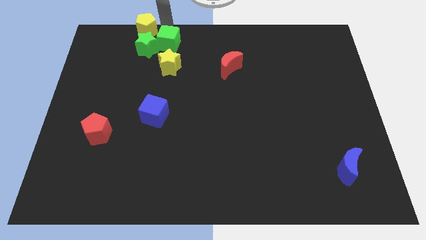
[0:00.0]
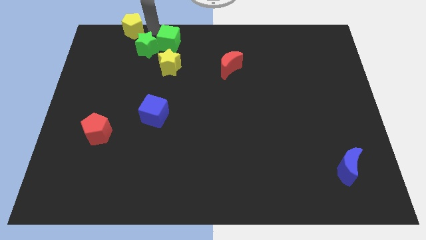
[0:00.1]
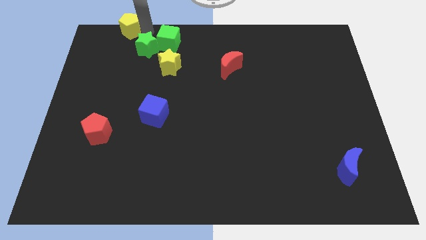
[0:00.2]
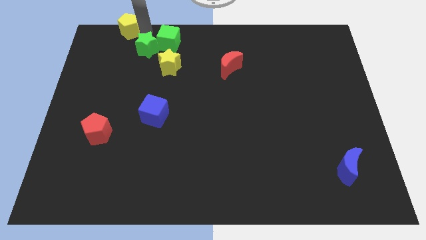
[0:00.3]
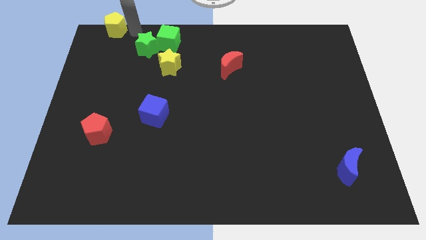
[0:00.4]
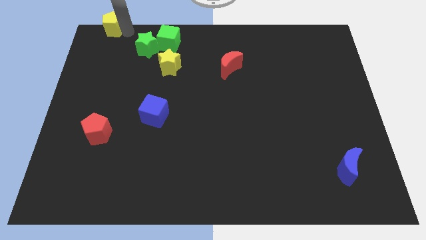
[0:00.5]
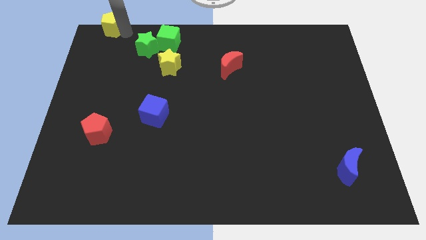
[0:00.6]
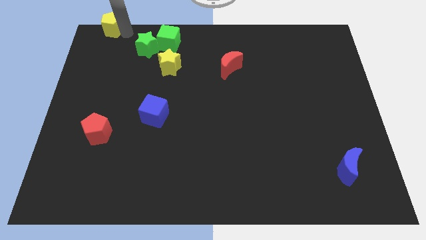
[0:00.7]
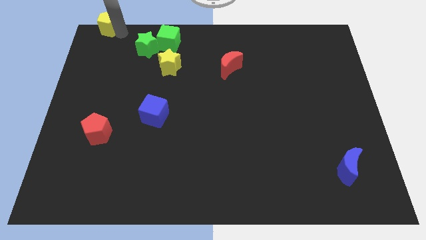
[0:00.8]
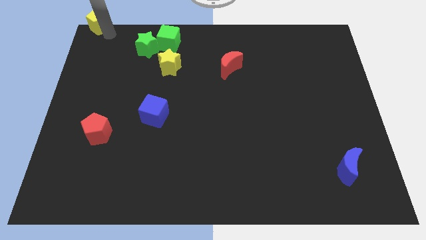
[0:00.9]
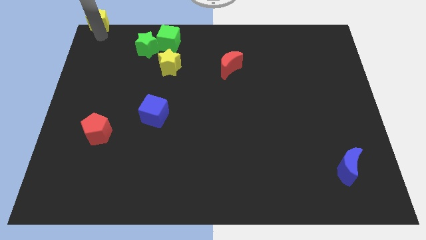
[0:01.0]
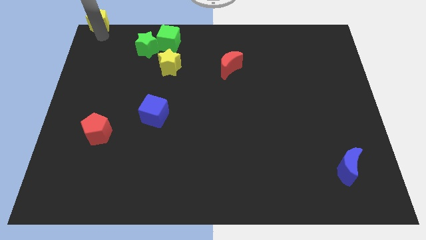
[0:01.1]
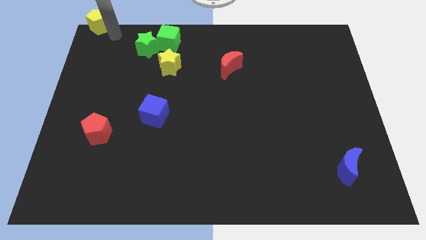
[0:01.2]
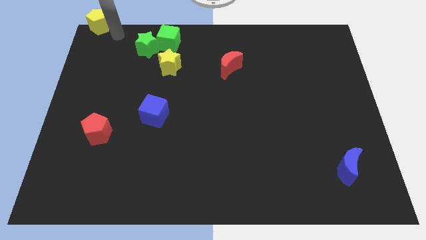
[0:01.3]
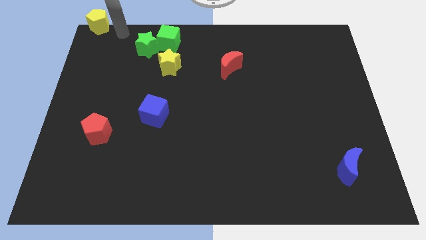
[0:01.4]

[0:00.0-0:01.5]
separate the yellow pentagon from green cube

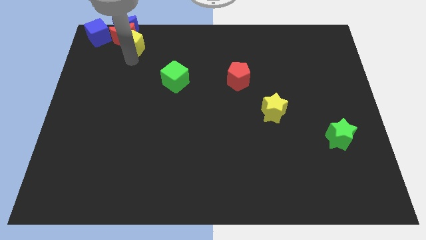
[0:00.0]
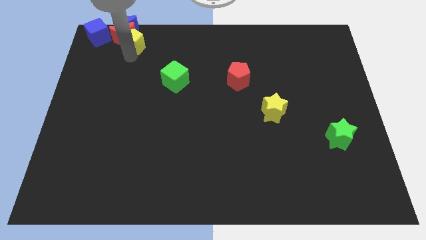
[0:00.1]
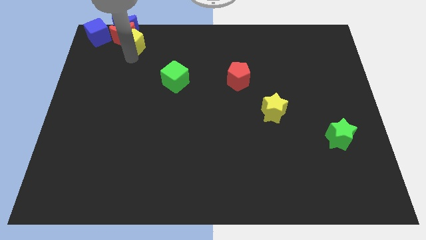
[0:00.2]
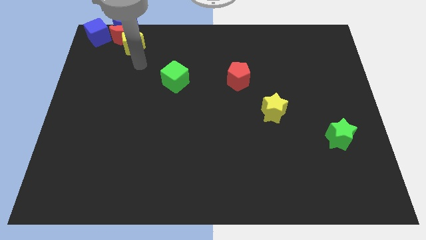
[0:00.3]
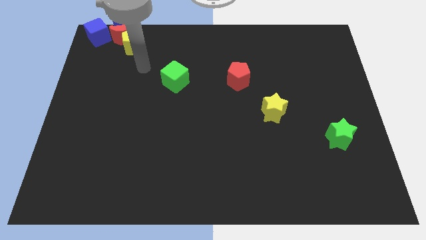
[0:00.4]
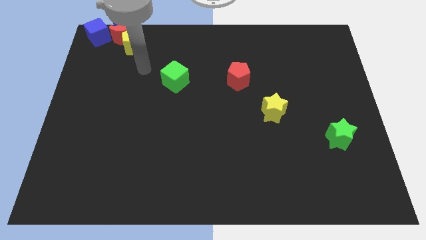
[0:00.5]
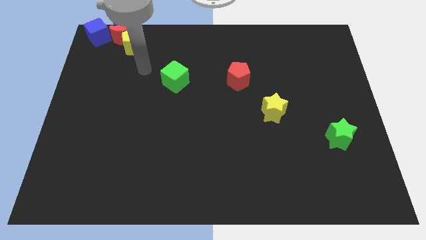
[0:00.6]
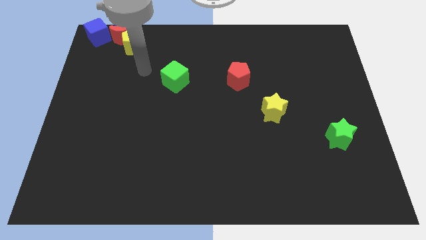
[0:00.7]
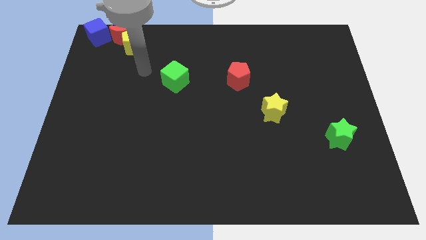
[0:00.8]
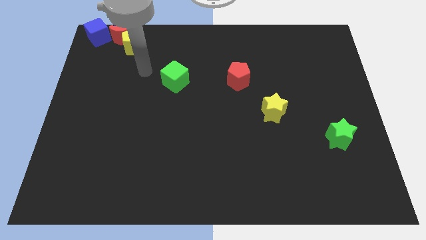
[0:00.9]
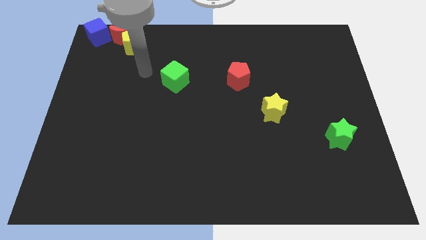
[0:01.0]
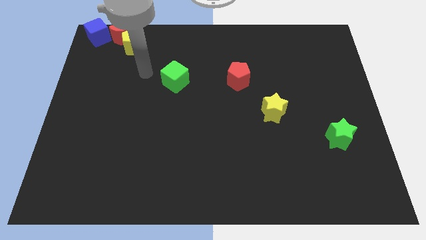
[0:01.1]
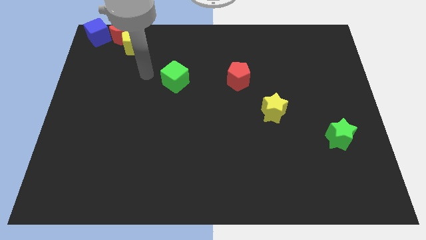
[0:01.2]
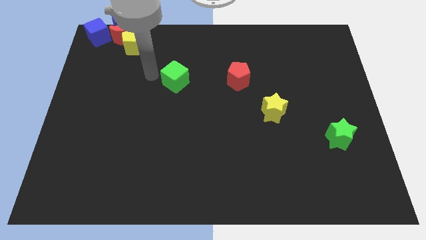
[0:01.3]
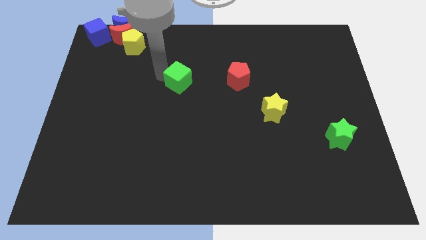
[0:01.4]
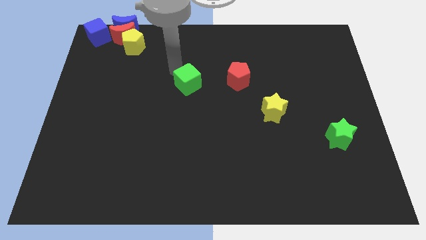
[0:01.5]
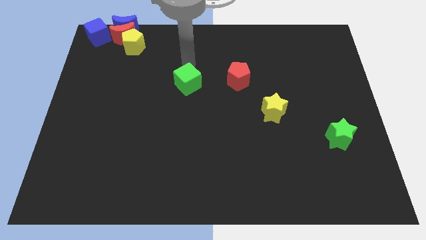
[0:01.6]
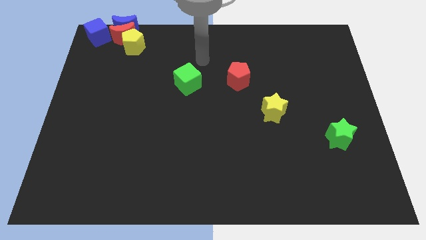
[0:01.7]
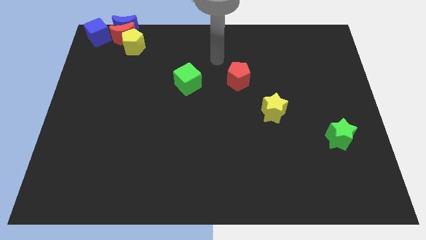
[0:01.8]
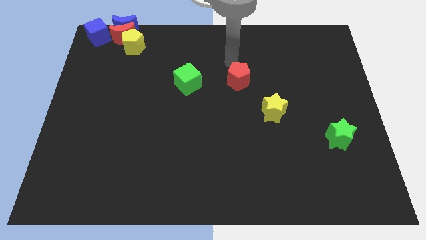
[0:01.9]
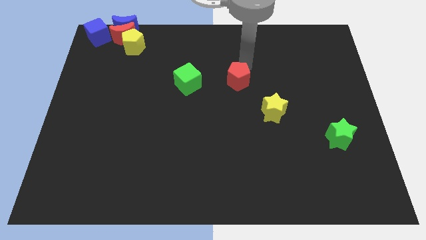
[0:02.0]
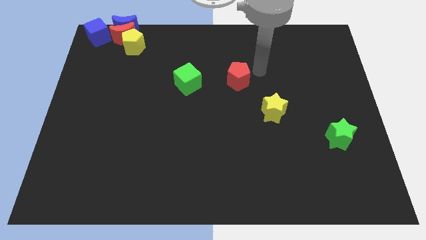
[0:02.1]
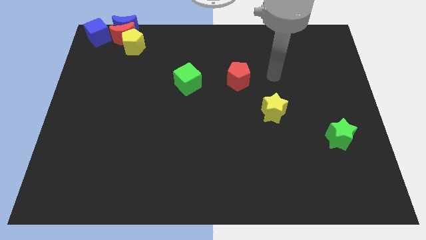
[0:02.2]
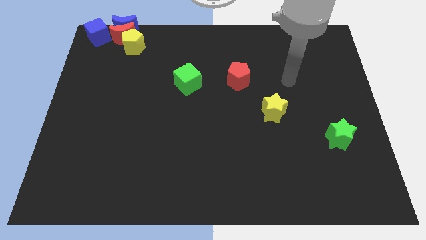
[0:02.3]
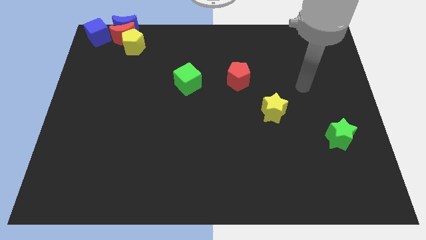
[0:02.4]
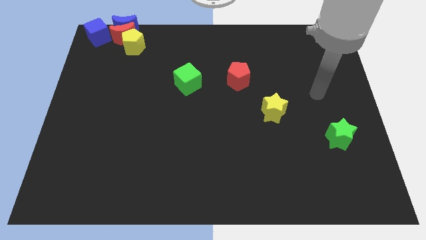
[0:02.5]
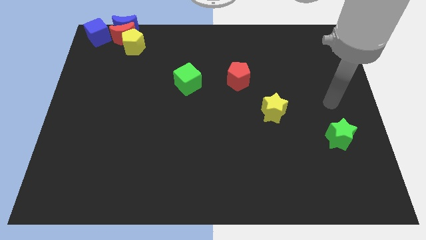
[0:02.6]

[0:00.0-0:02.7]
move the green cube vertically to red pentagon

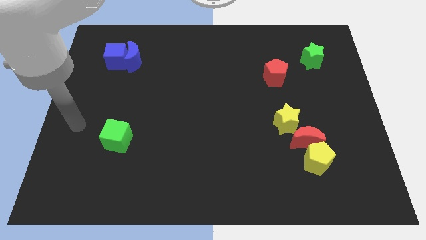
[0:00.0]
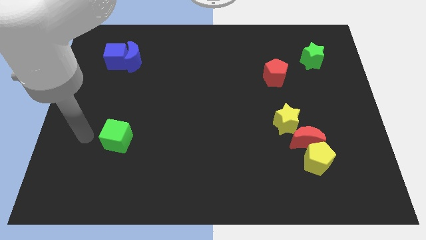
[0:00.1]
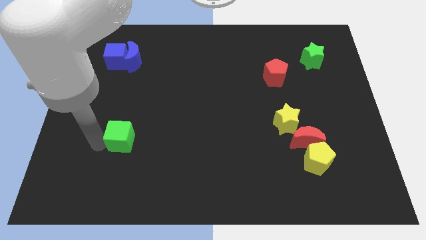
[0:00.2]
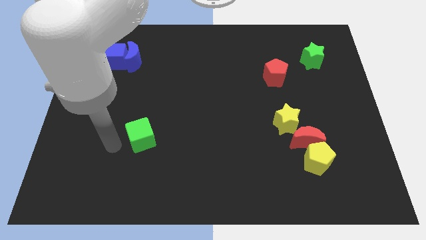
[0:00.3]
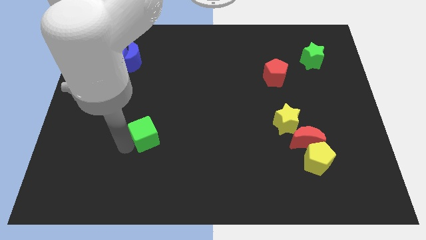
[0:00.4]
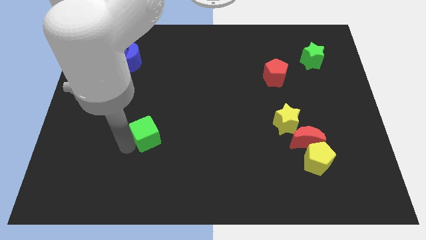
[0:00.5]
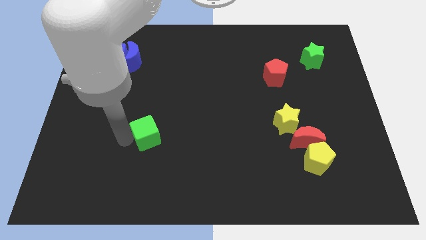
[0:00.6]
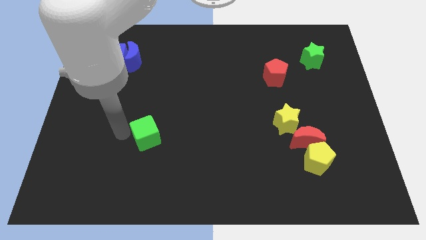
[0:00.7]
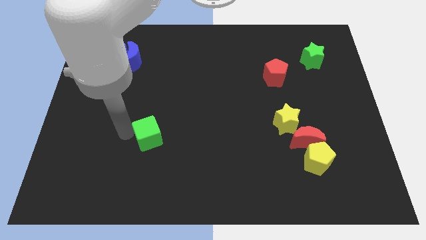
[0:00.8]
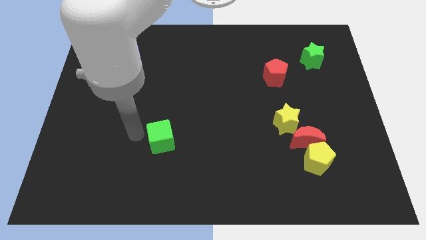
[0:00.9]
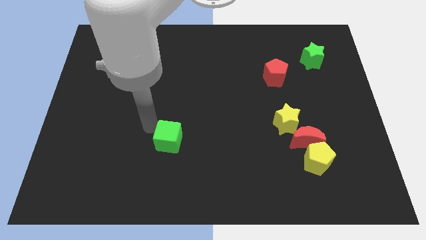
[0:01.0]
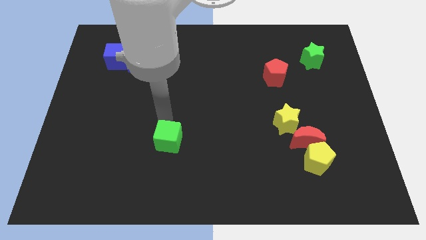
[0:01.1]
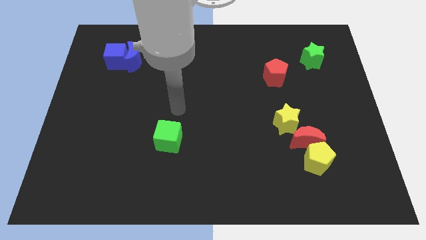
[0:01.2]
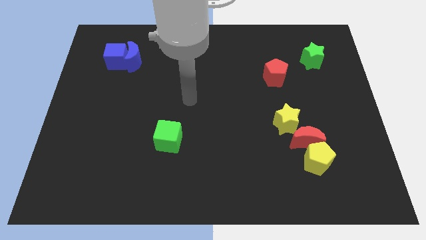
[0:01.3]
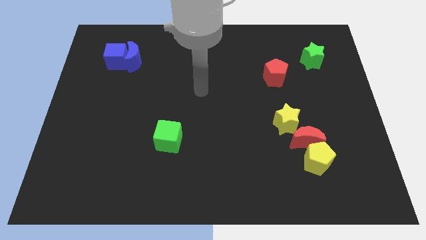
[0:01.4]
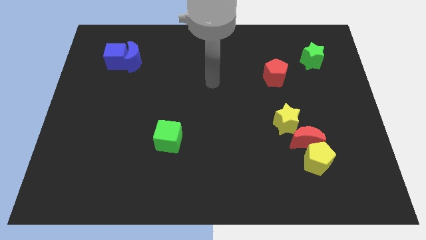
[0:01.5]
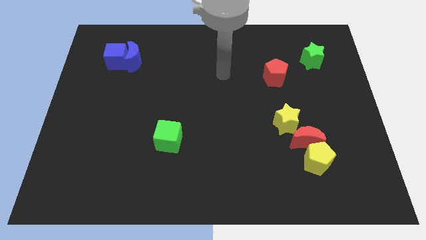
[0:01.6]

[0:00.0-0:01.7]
push green cube towards the right

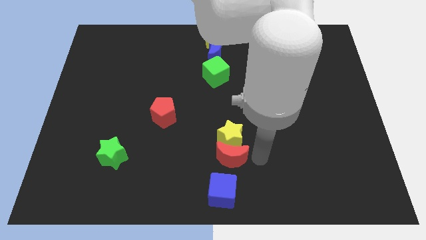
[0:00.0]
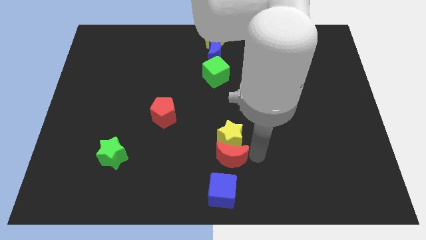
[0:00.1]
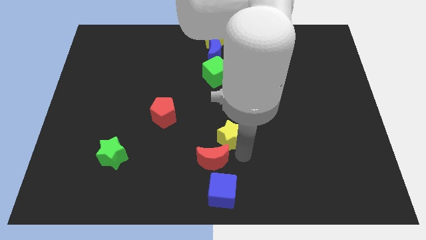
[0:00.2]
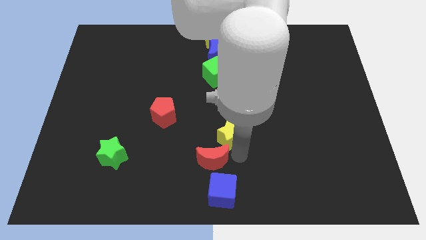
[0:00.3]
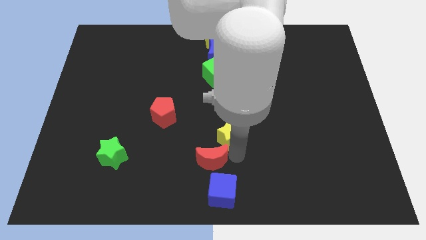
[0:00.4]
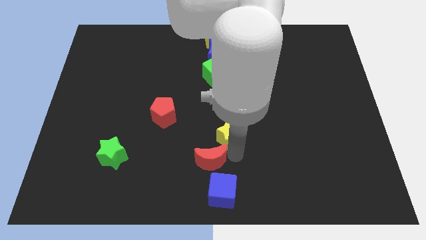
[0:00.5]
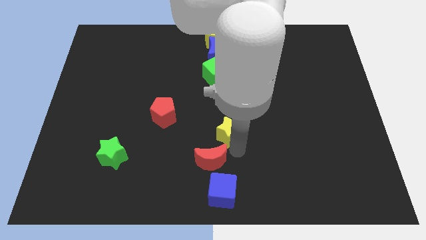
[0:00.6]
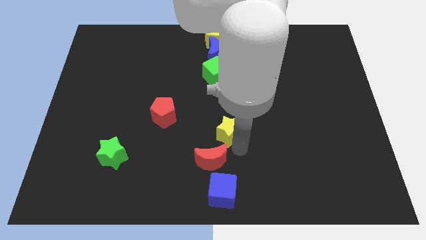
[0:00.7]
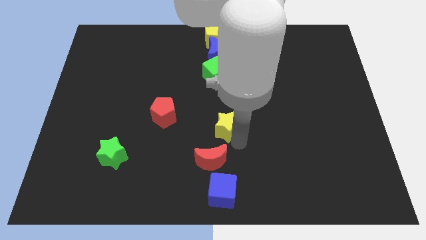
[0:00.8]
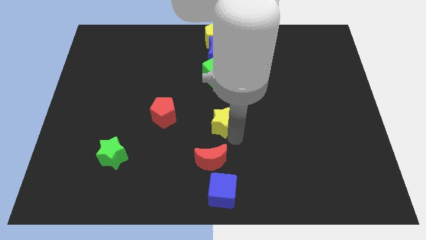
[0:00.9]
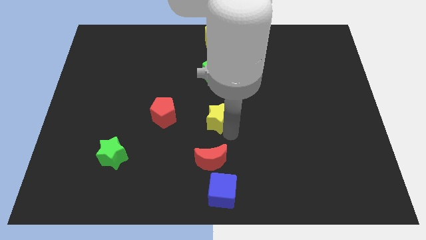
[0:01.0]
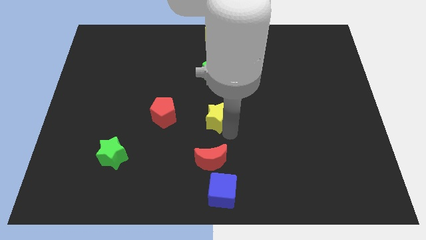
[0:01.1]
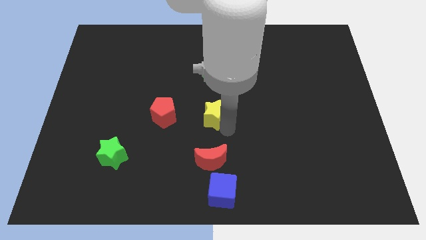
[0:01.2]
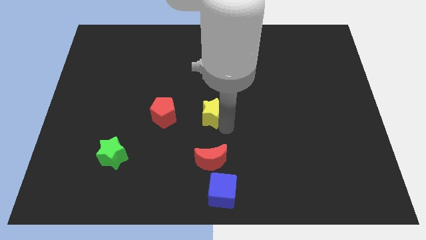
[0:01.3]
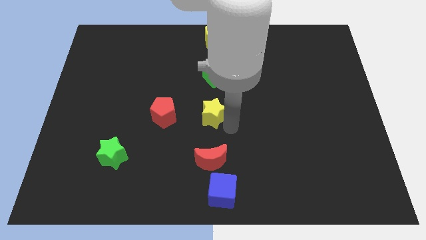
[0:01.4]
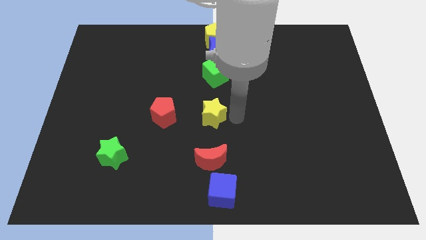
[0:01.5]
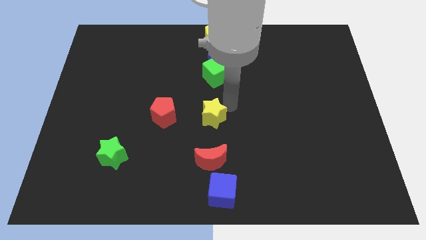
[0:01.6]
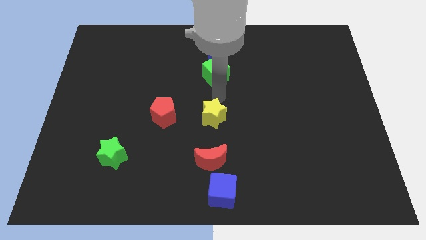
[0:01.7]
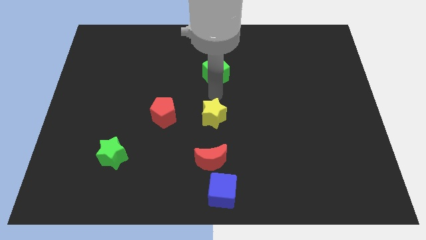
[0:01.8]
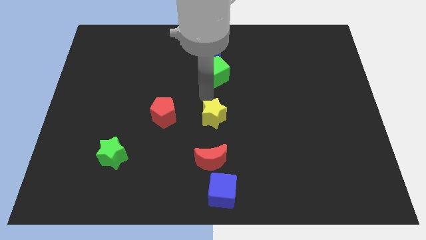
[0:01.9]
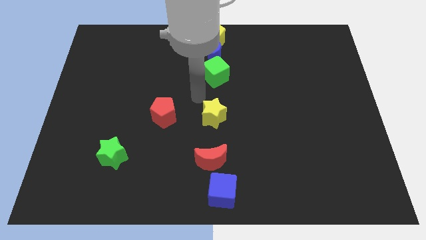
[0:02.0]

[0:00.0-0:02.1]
separate the yellow star from the red moon

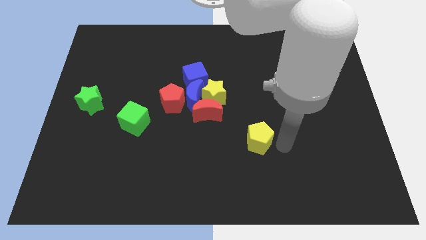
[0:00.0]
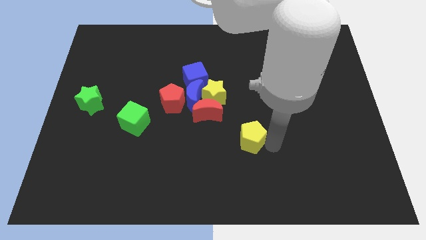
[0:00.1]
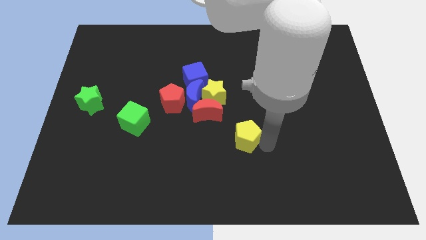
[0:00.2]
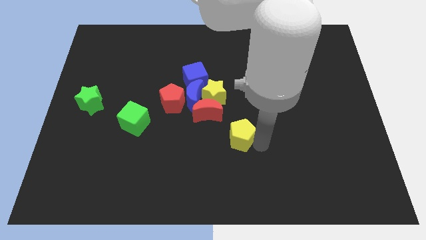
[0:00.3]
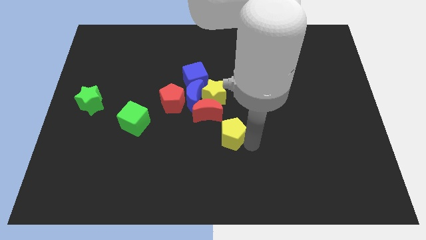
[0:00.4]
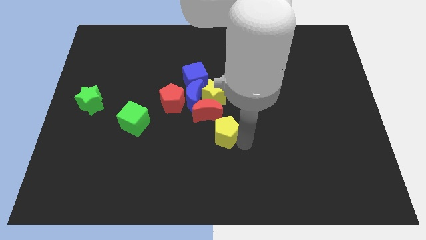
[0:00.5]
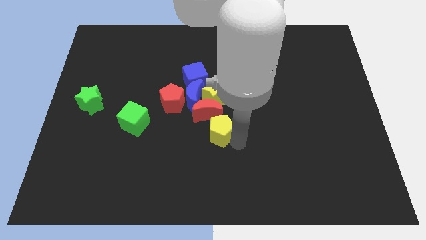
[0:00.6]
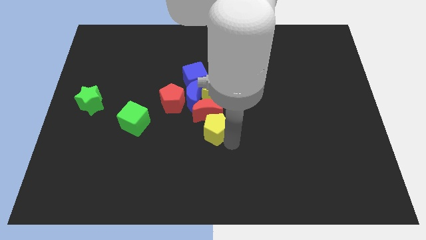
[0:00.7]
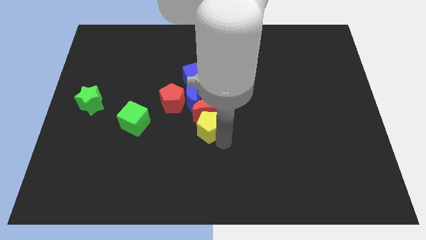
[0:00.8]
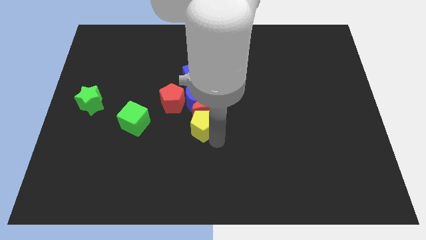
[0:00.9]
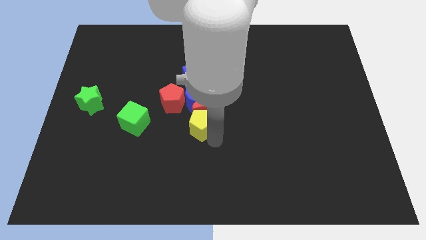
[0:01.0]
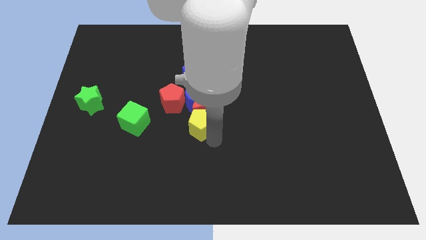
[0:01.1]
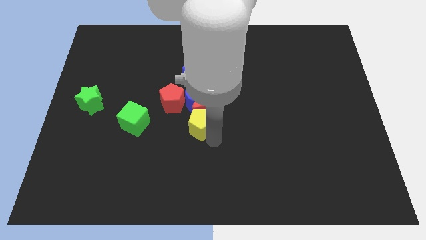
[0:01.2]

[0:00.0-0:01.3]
move the yellow pentagon to the bottom of the red crescent
